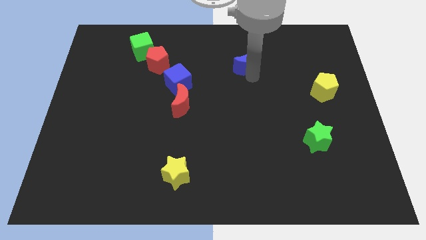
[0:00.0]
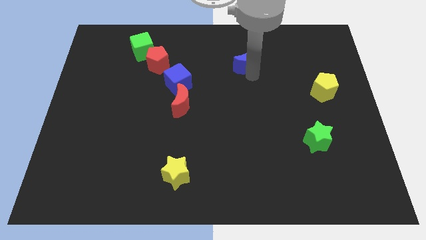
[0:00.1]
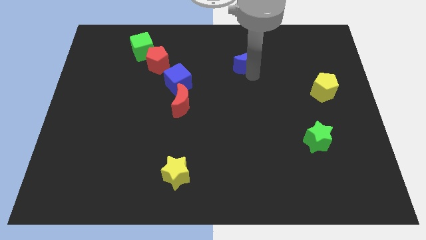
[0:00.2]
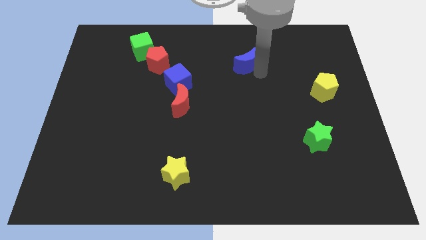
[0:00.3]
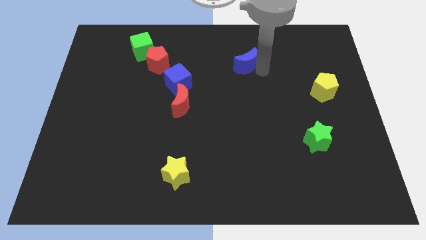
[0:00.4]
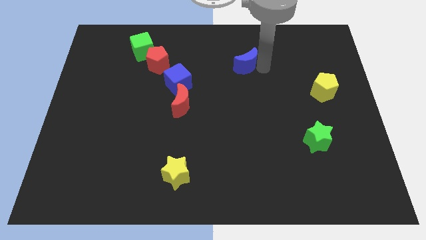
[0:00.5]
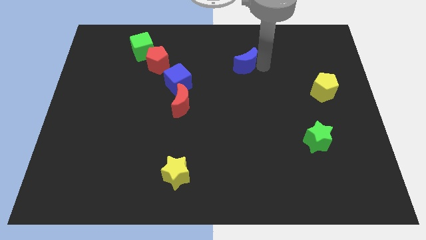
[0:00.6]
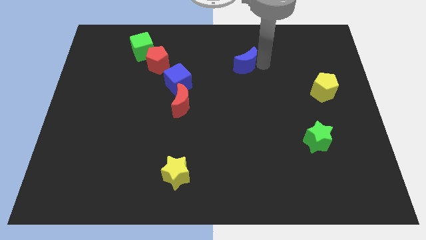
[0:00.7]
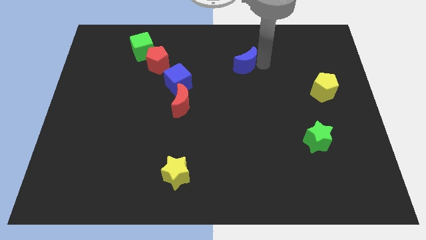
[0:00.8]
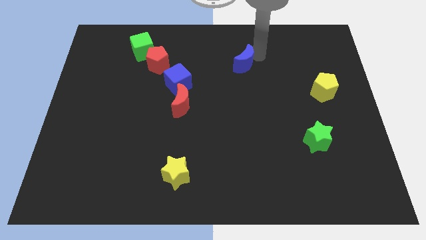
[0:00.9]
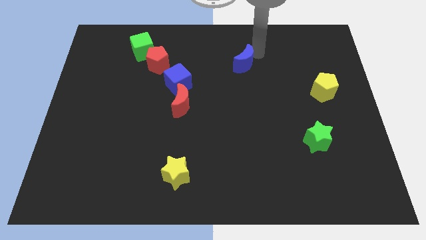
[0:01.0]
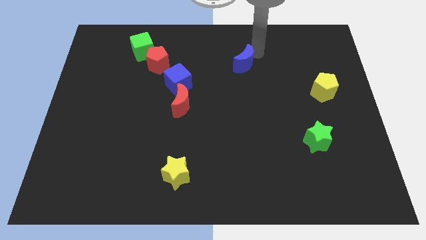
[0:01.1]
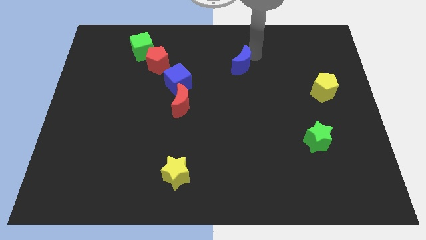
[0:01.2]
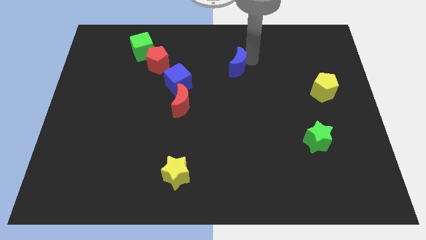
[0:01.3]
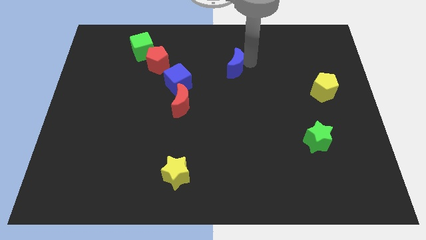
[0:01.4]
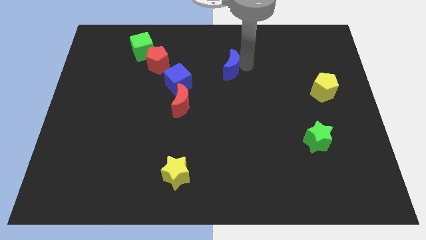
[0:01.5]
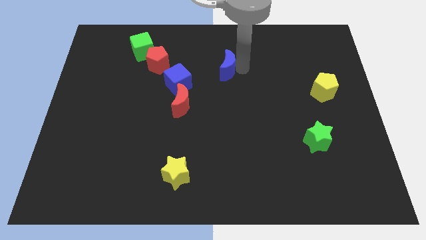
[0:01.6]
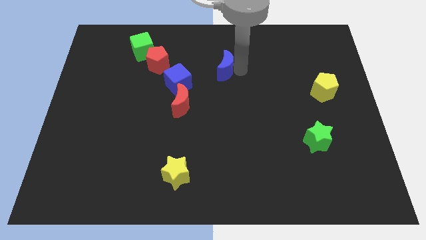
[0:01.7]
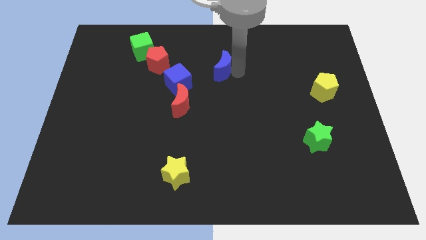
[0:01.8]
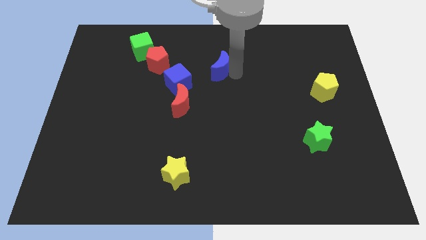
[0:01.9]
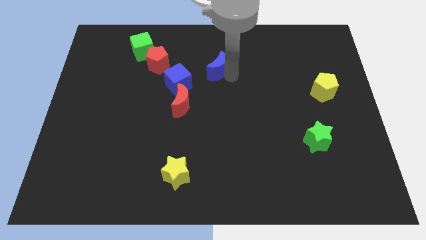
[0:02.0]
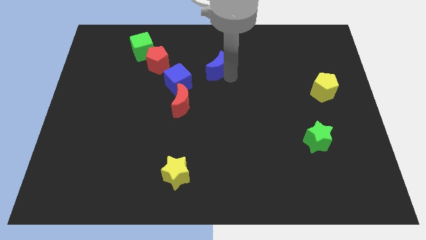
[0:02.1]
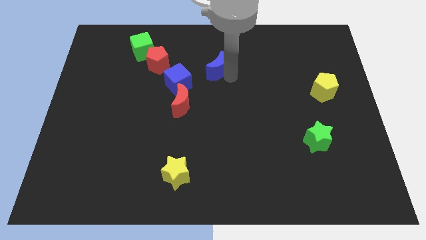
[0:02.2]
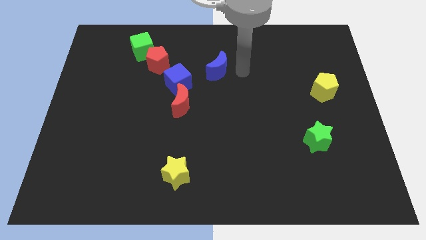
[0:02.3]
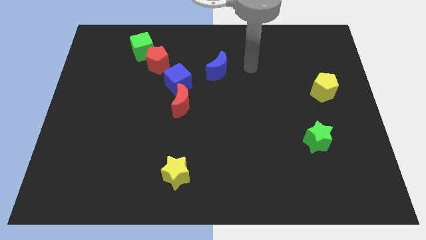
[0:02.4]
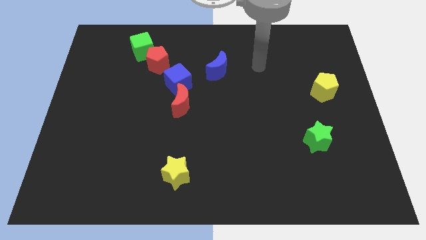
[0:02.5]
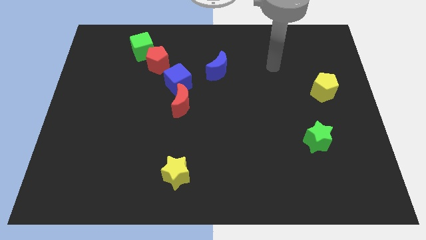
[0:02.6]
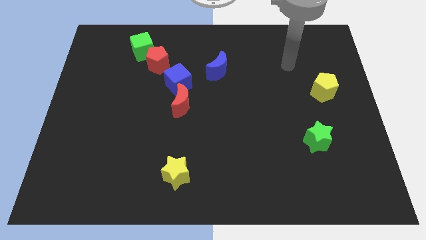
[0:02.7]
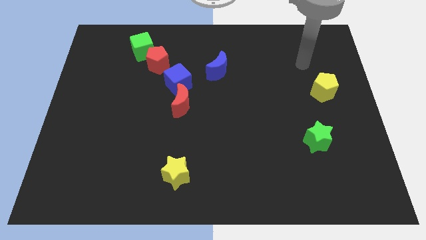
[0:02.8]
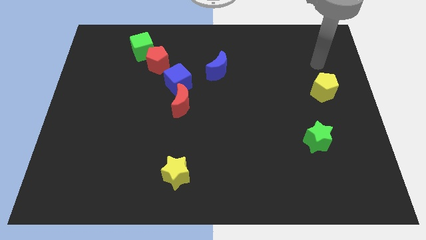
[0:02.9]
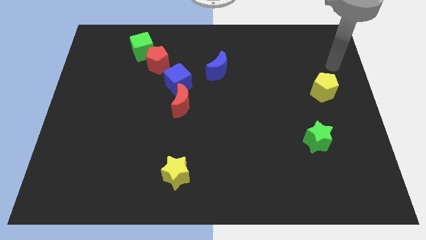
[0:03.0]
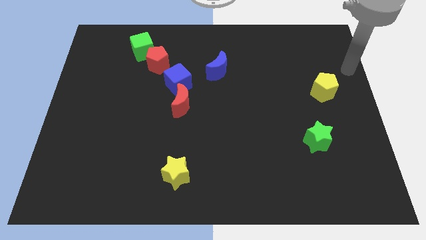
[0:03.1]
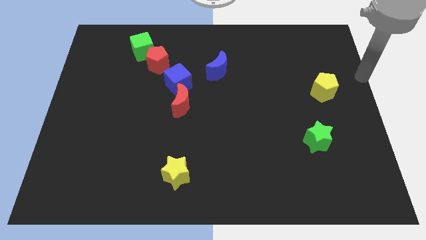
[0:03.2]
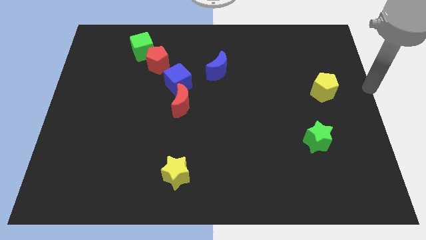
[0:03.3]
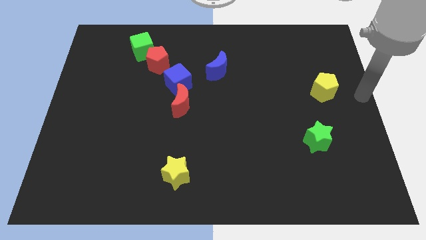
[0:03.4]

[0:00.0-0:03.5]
push the blue crescent to the top right side of the blue cube

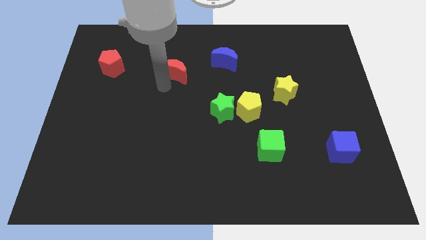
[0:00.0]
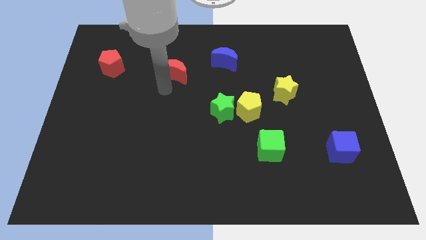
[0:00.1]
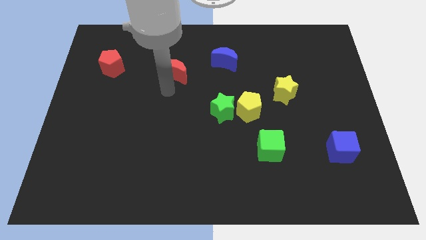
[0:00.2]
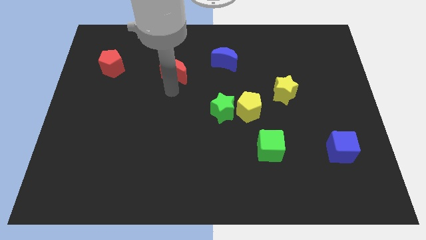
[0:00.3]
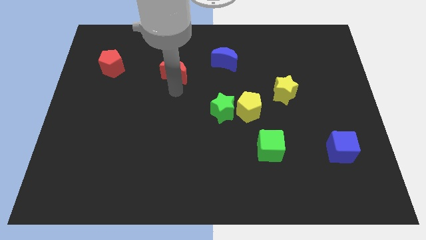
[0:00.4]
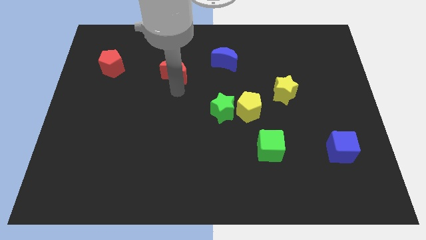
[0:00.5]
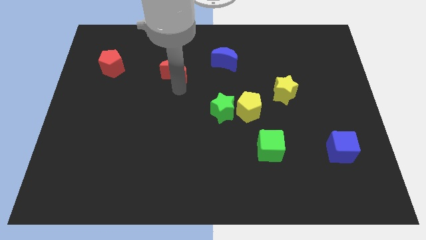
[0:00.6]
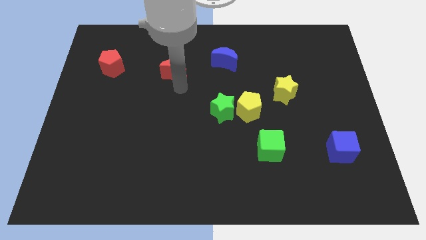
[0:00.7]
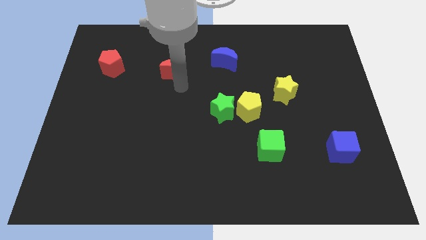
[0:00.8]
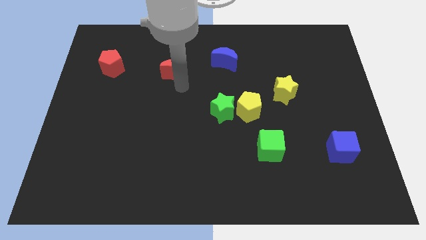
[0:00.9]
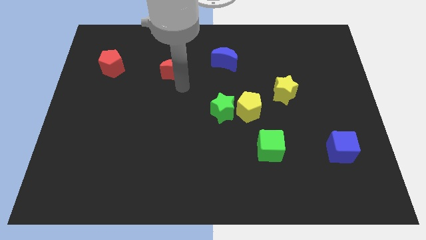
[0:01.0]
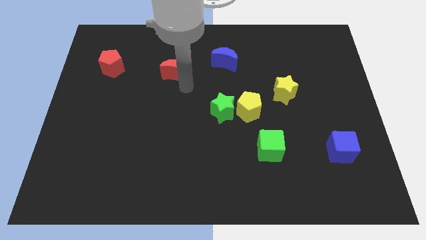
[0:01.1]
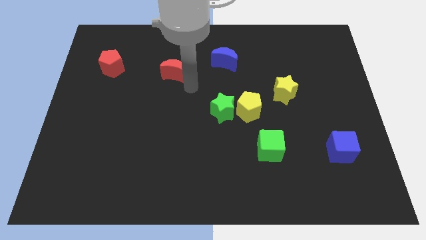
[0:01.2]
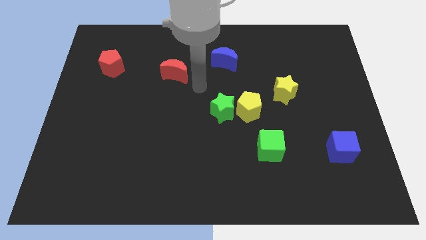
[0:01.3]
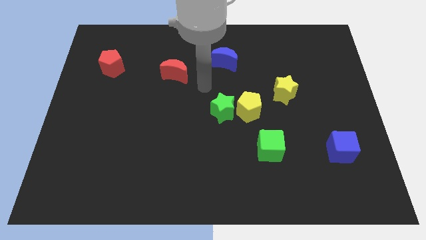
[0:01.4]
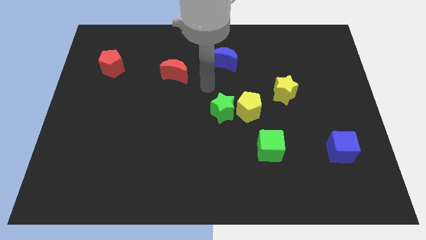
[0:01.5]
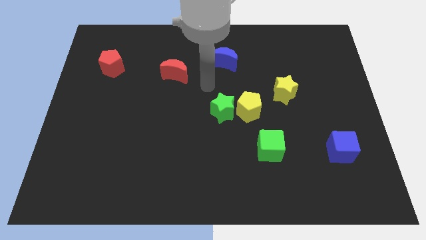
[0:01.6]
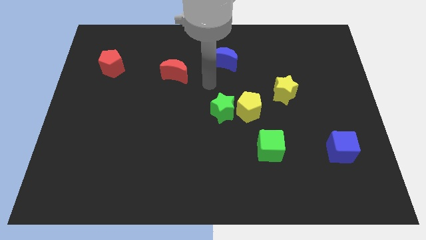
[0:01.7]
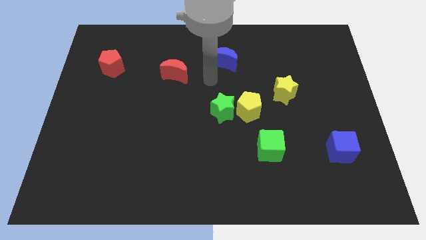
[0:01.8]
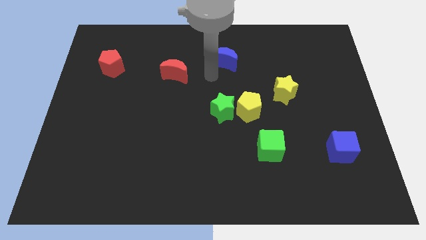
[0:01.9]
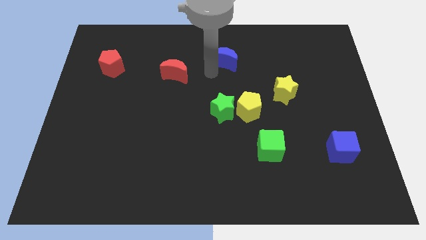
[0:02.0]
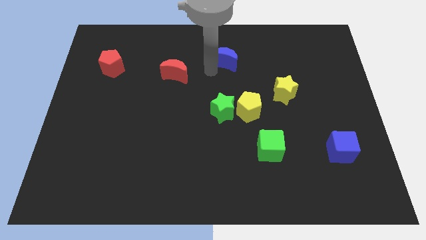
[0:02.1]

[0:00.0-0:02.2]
move your arm to the bottom of blue crescent

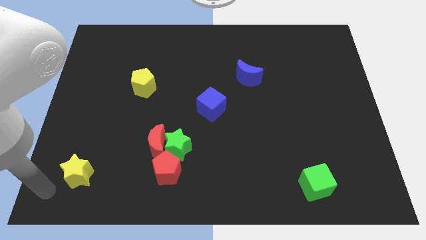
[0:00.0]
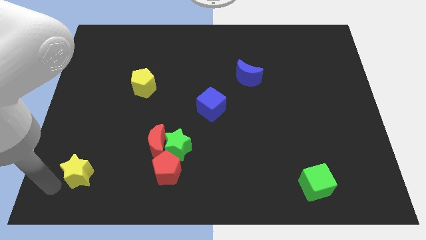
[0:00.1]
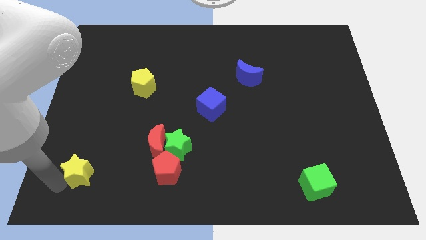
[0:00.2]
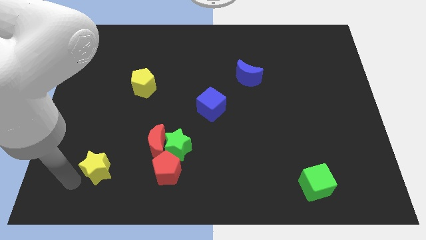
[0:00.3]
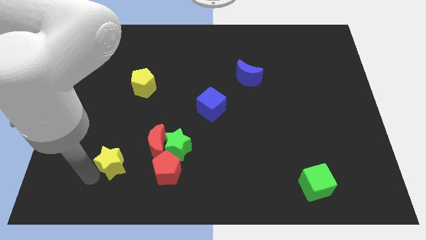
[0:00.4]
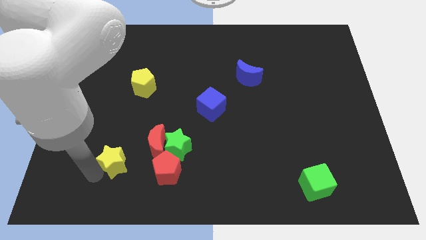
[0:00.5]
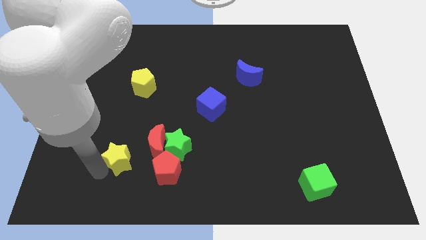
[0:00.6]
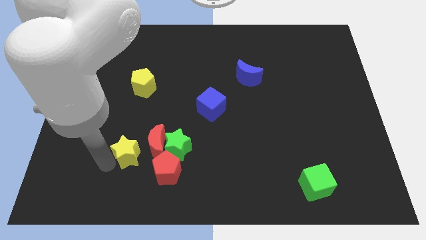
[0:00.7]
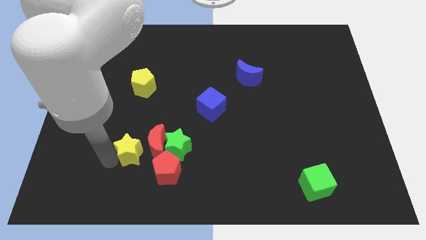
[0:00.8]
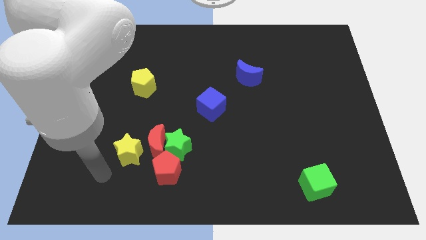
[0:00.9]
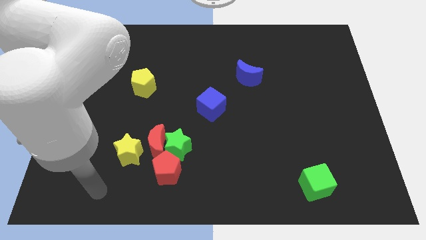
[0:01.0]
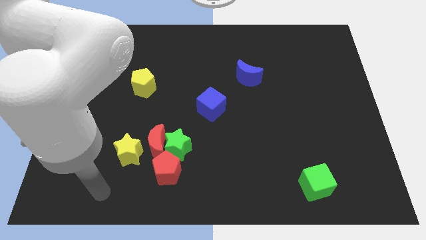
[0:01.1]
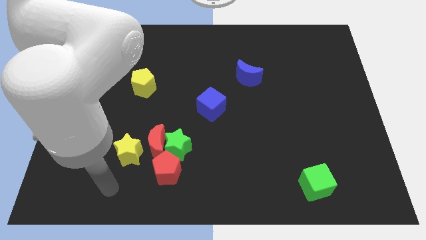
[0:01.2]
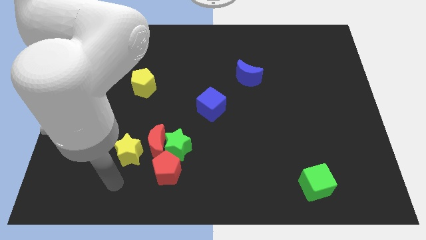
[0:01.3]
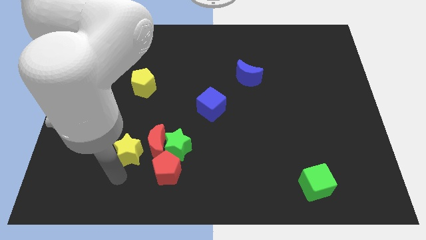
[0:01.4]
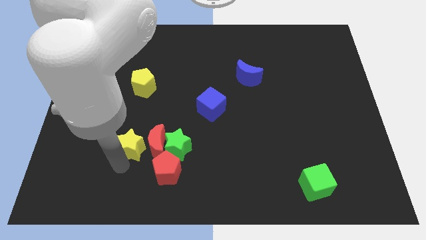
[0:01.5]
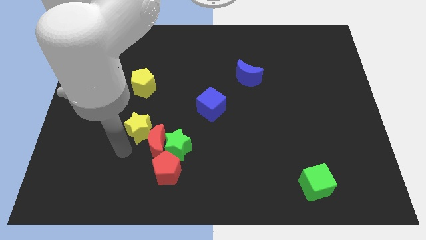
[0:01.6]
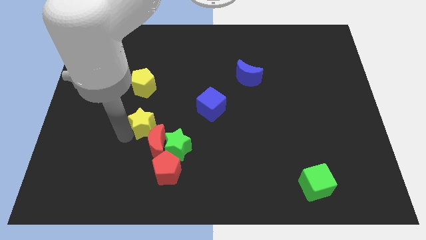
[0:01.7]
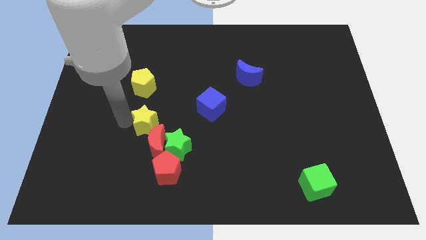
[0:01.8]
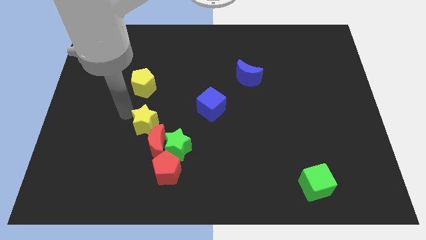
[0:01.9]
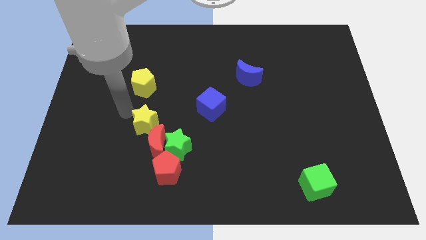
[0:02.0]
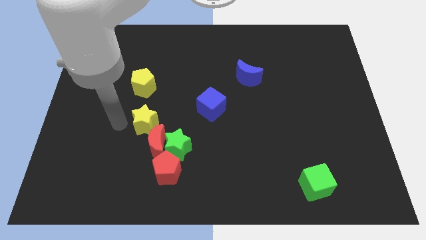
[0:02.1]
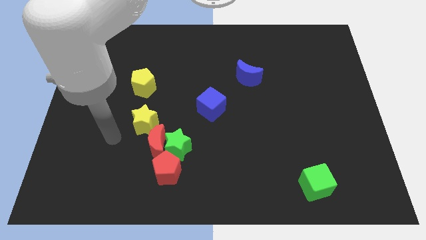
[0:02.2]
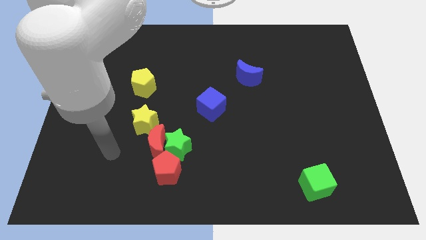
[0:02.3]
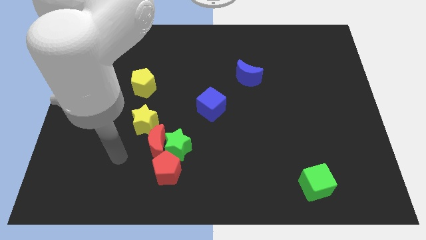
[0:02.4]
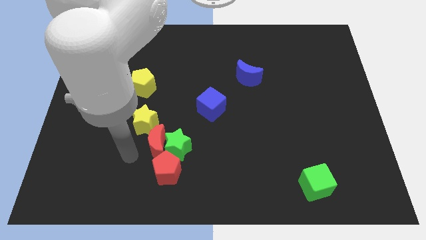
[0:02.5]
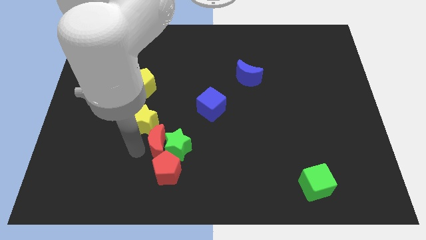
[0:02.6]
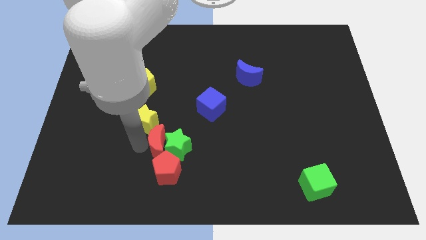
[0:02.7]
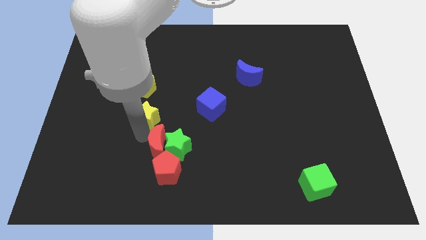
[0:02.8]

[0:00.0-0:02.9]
move the yellow star in between the red and yellow pentagon

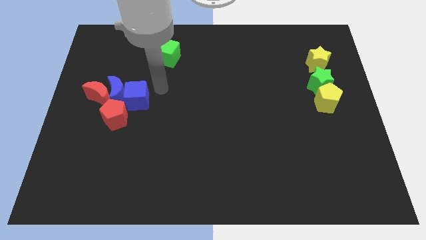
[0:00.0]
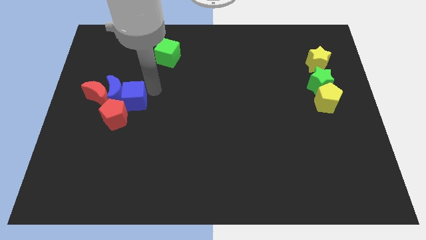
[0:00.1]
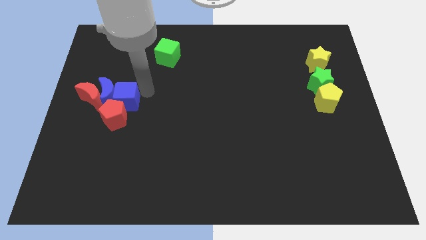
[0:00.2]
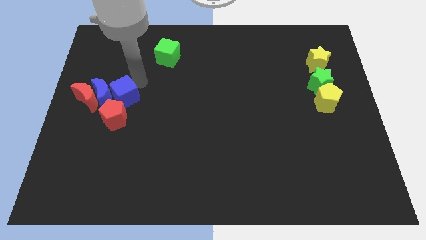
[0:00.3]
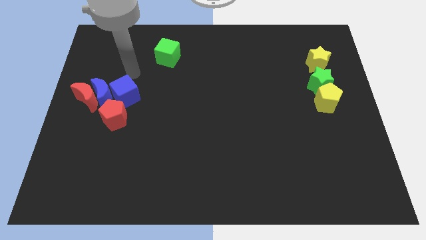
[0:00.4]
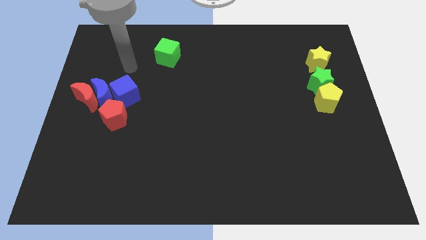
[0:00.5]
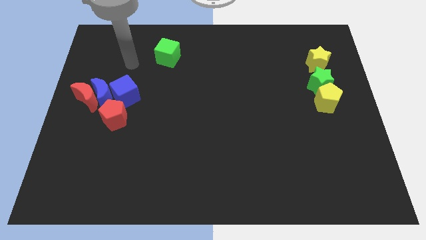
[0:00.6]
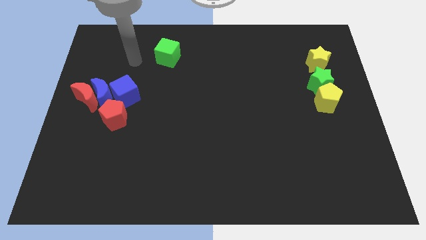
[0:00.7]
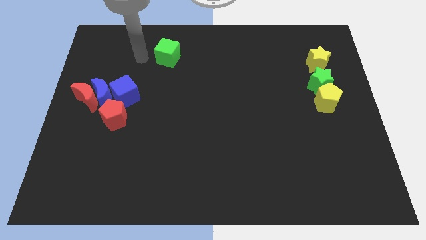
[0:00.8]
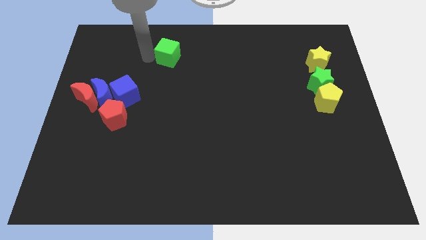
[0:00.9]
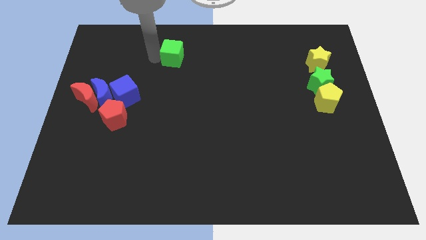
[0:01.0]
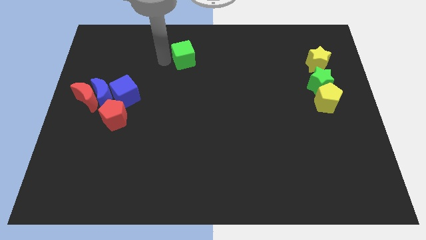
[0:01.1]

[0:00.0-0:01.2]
move green cube towards top center
